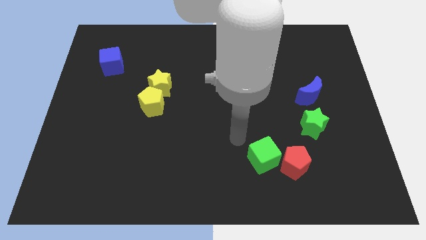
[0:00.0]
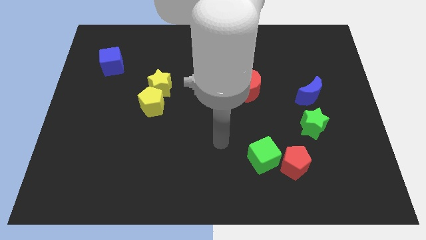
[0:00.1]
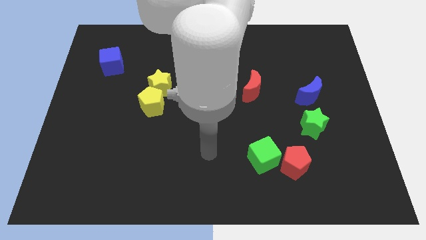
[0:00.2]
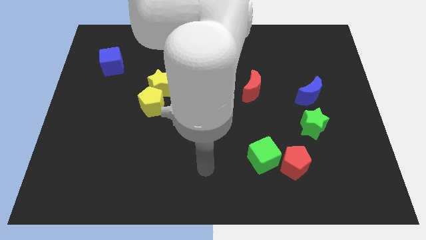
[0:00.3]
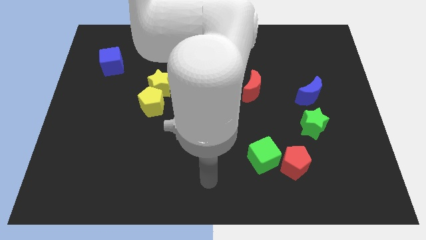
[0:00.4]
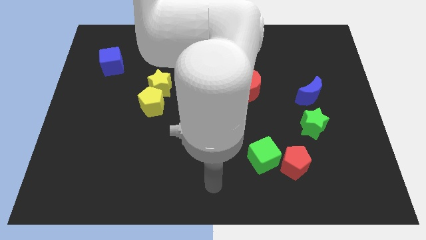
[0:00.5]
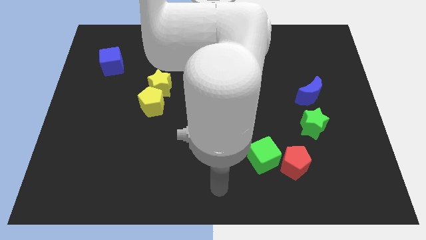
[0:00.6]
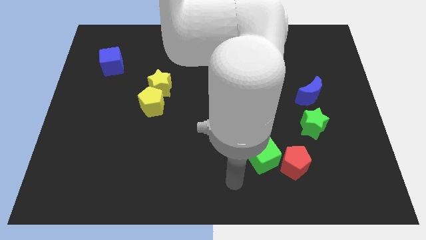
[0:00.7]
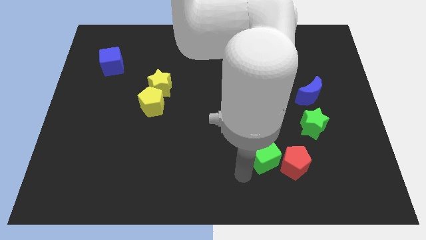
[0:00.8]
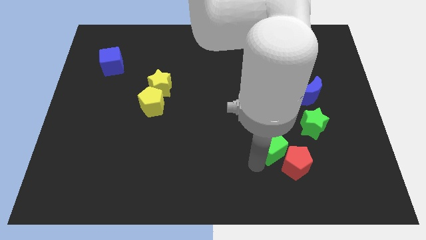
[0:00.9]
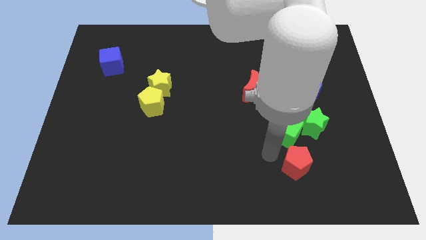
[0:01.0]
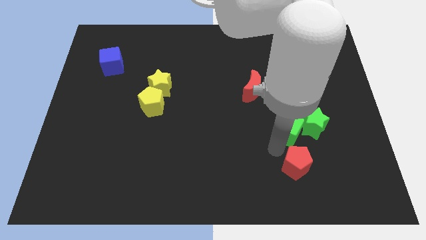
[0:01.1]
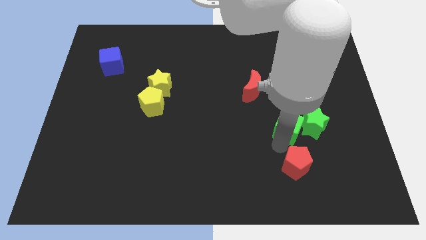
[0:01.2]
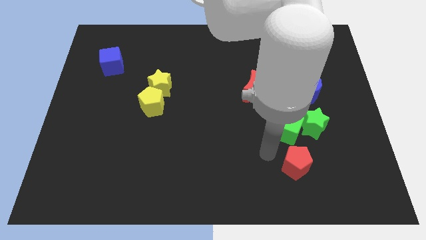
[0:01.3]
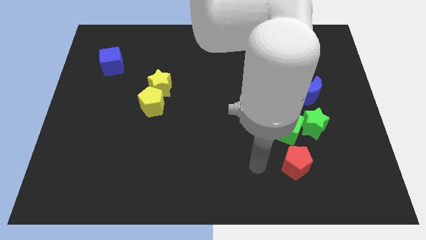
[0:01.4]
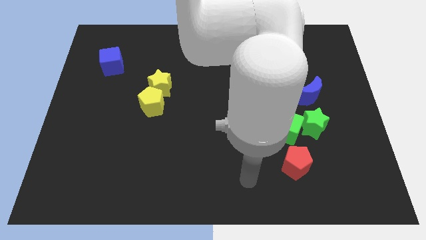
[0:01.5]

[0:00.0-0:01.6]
place the green cube to the left of green star

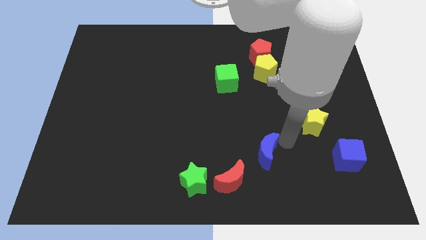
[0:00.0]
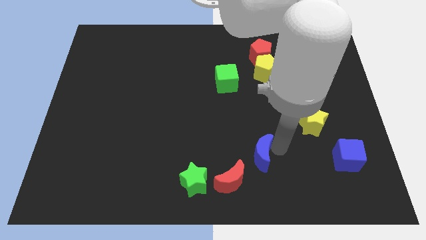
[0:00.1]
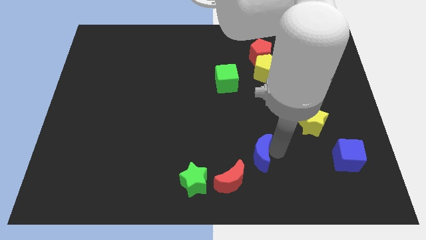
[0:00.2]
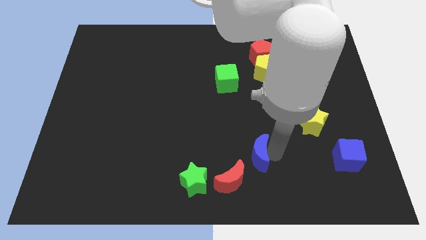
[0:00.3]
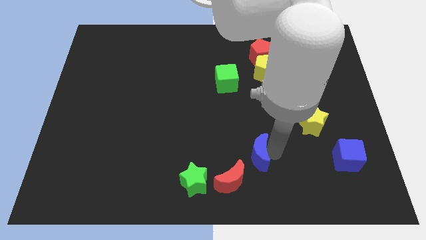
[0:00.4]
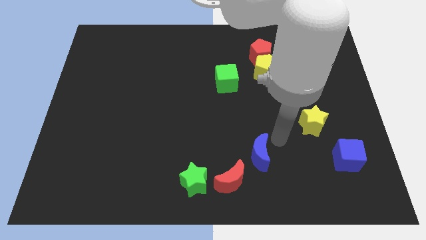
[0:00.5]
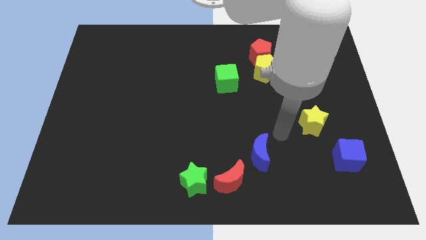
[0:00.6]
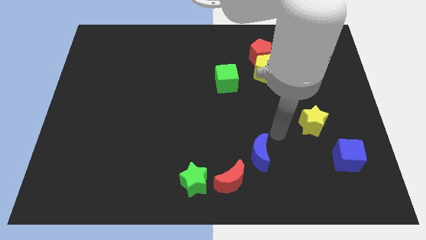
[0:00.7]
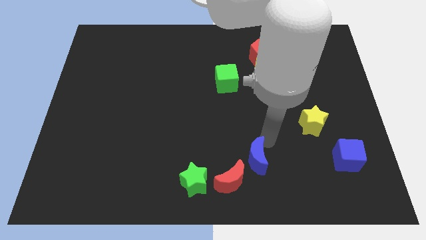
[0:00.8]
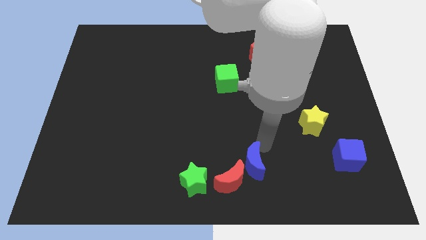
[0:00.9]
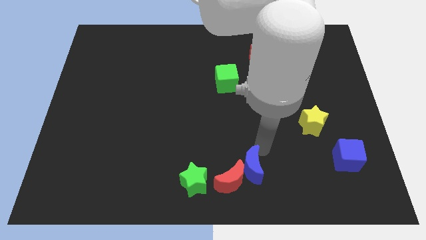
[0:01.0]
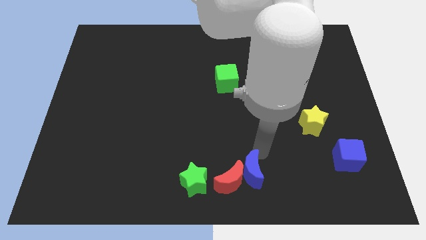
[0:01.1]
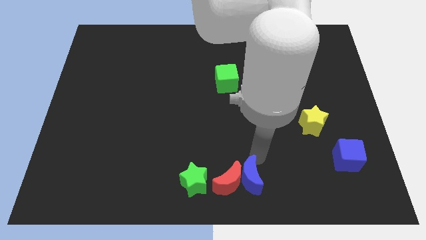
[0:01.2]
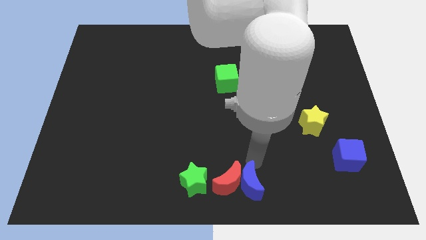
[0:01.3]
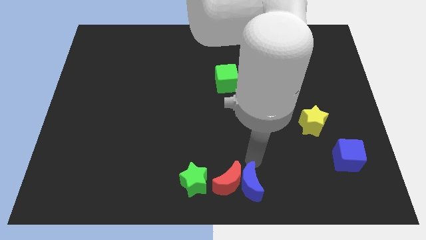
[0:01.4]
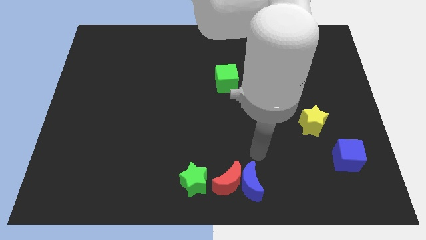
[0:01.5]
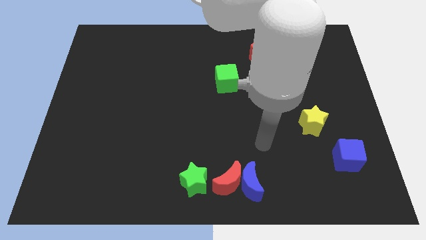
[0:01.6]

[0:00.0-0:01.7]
put the blue moon to the right of the red moon

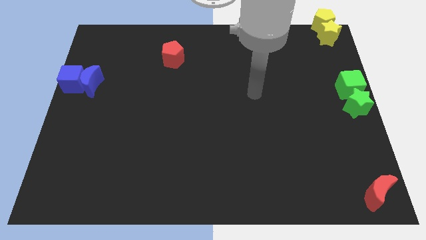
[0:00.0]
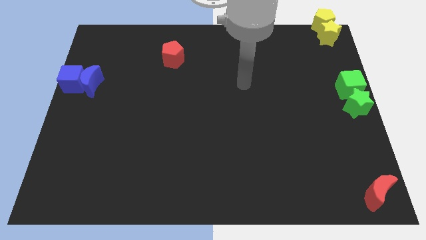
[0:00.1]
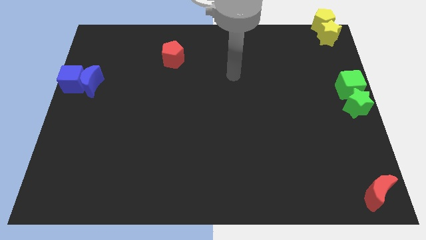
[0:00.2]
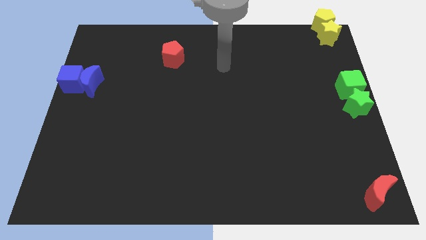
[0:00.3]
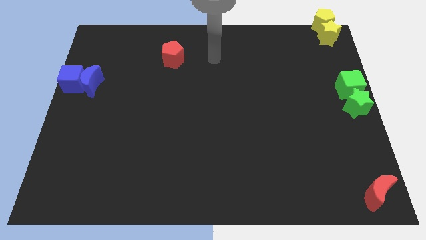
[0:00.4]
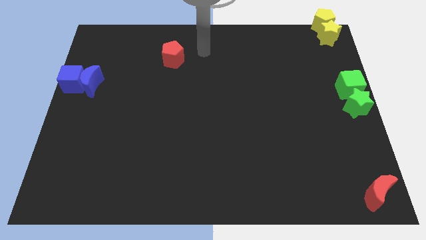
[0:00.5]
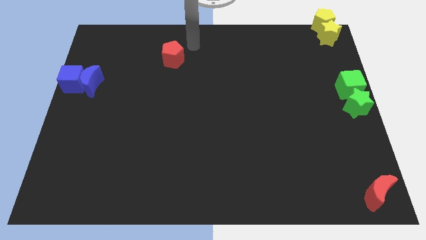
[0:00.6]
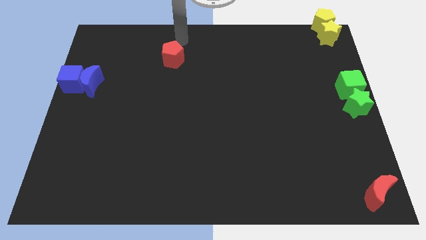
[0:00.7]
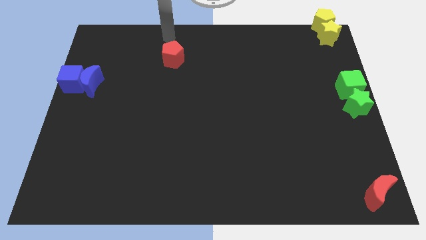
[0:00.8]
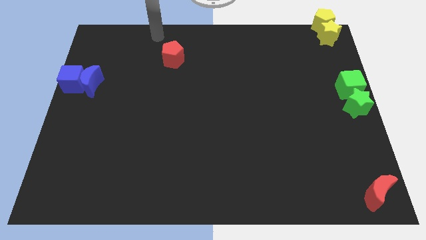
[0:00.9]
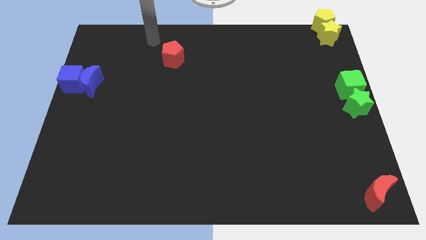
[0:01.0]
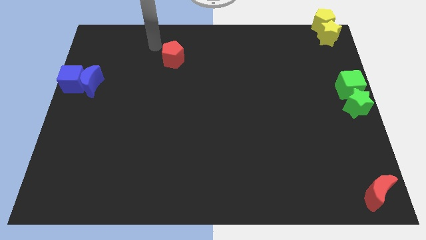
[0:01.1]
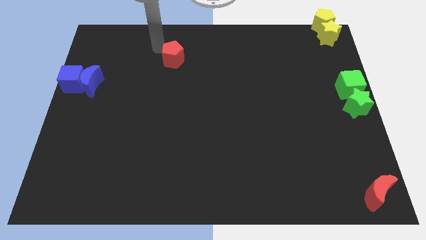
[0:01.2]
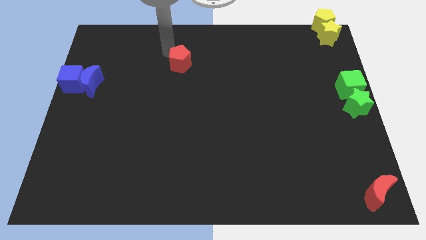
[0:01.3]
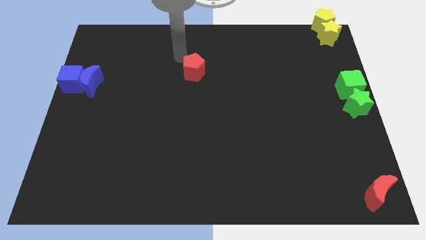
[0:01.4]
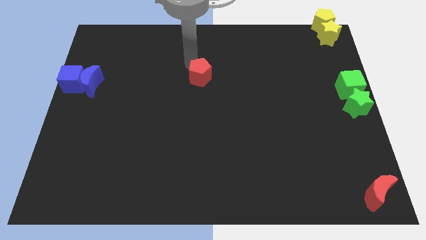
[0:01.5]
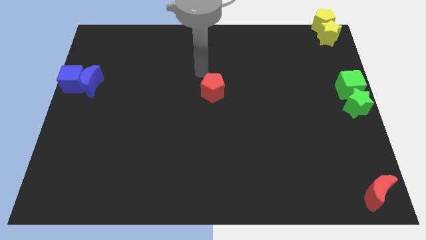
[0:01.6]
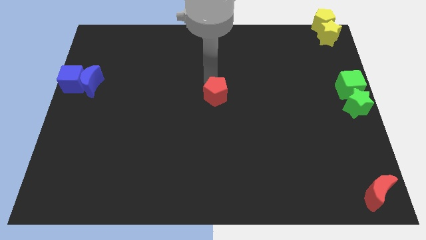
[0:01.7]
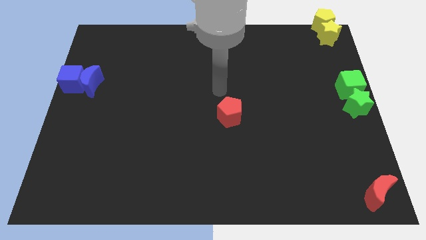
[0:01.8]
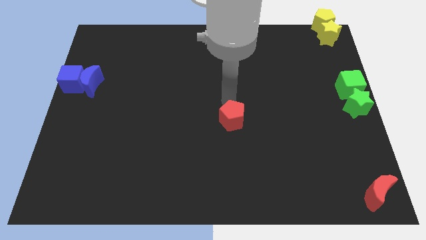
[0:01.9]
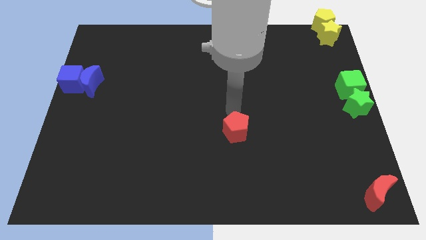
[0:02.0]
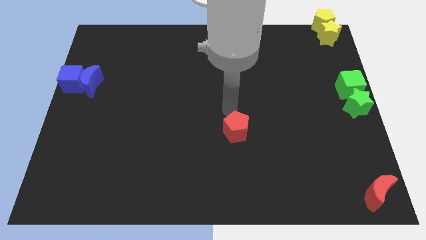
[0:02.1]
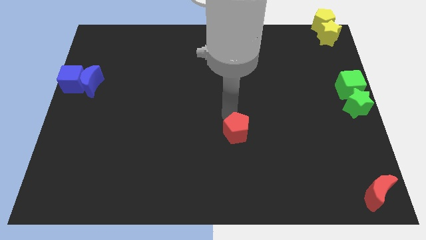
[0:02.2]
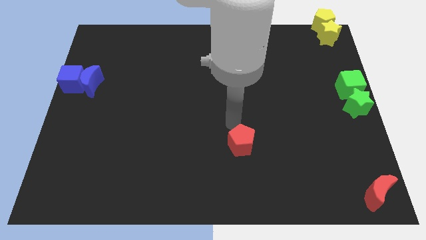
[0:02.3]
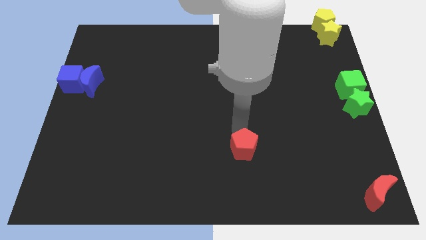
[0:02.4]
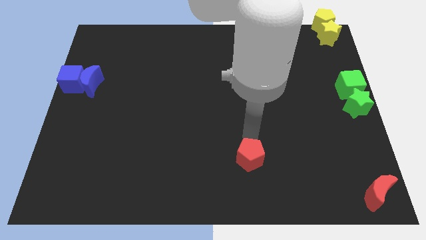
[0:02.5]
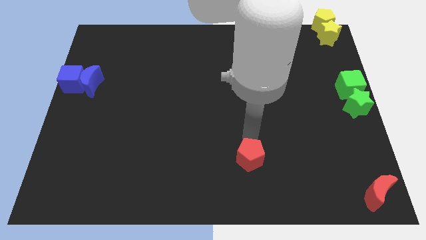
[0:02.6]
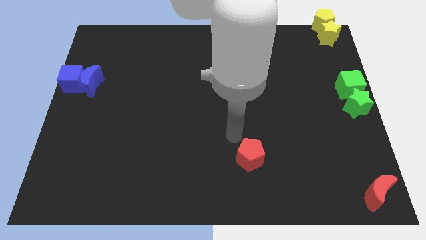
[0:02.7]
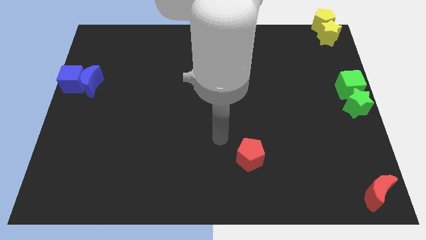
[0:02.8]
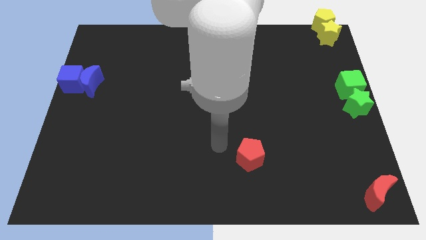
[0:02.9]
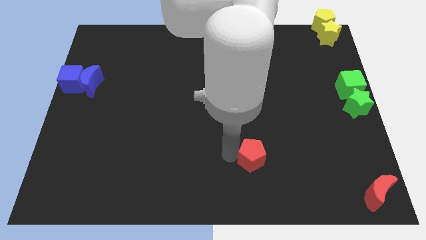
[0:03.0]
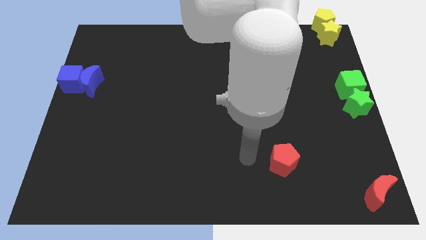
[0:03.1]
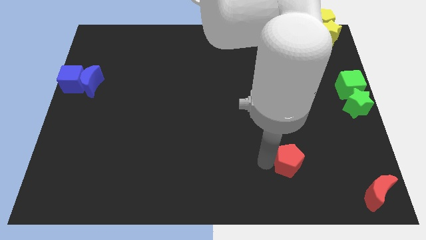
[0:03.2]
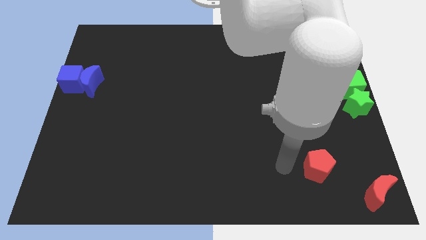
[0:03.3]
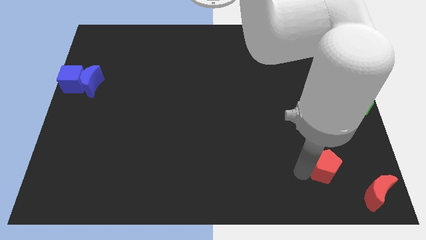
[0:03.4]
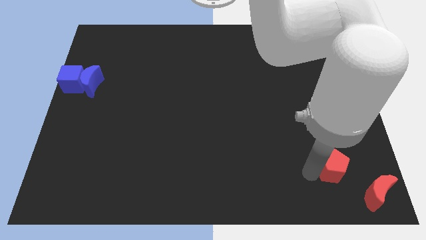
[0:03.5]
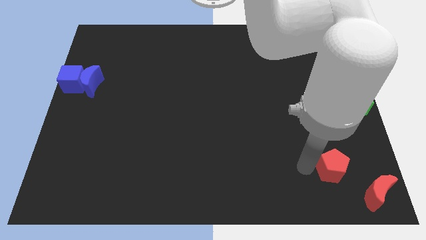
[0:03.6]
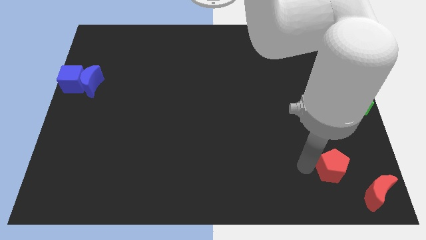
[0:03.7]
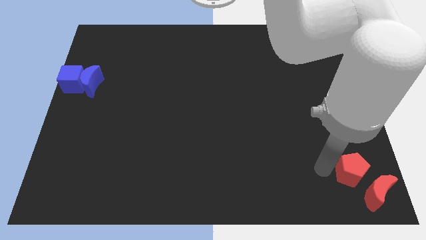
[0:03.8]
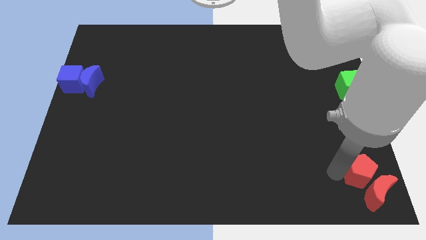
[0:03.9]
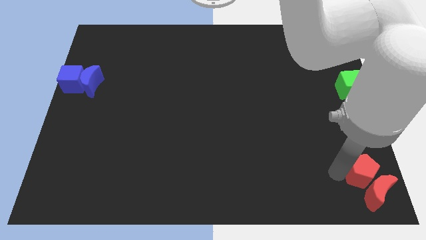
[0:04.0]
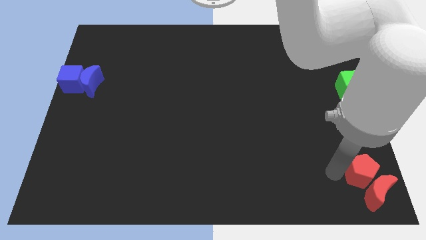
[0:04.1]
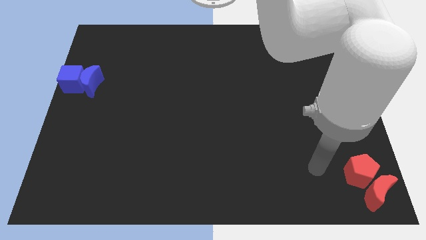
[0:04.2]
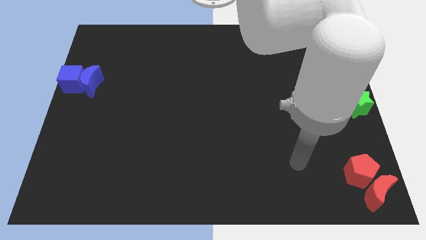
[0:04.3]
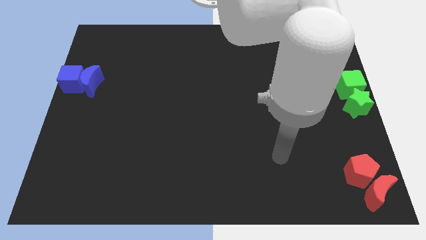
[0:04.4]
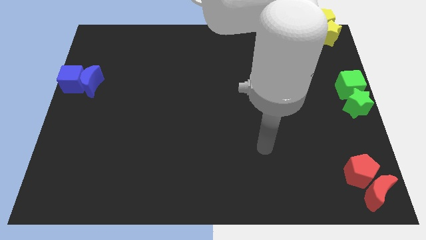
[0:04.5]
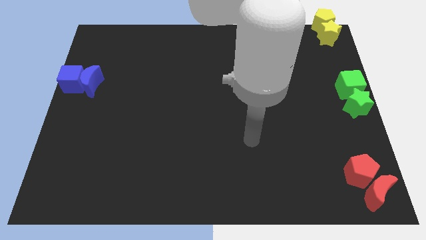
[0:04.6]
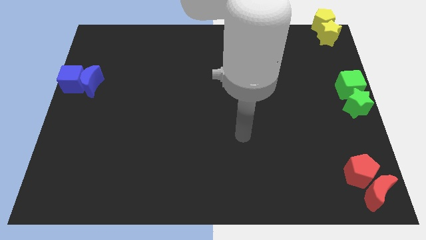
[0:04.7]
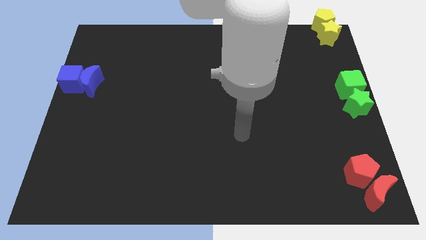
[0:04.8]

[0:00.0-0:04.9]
place the red pentagon above the red moon

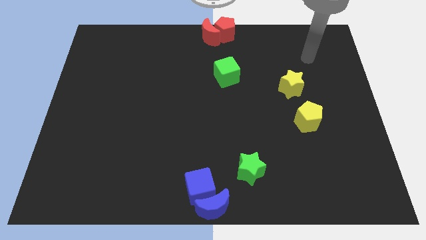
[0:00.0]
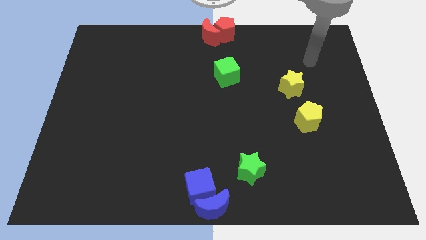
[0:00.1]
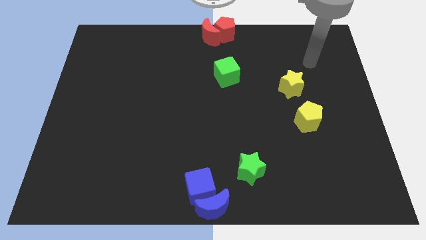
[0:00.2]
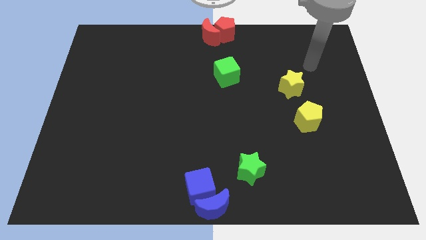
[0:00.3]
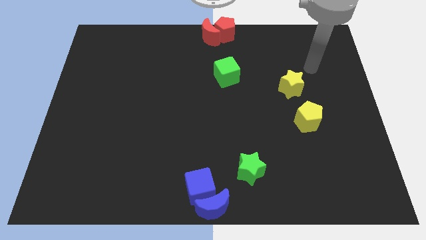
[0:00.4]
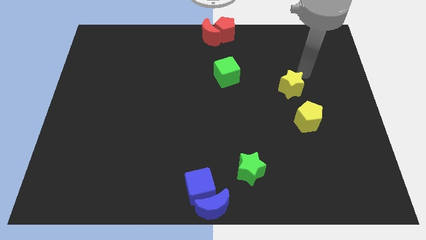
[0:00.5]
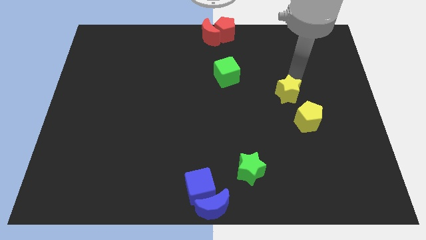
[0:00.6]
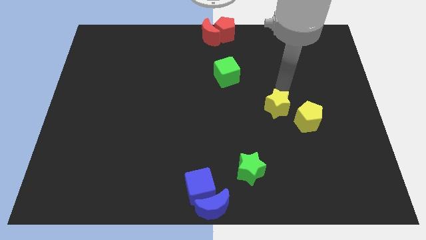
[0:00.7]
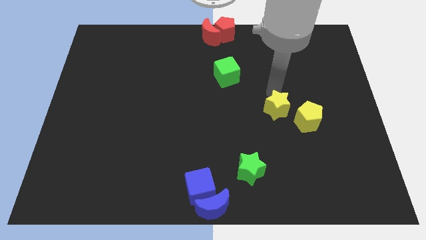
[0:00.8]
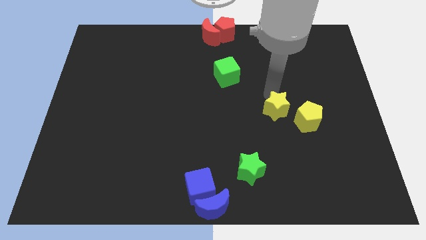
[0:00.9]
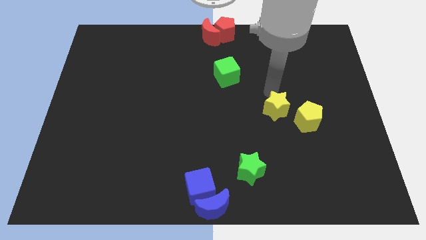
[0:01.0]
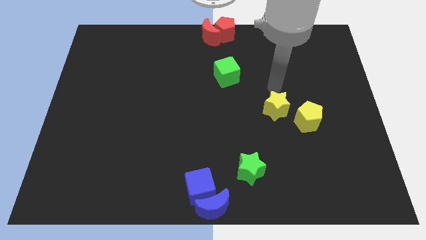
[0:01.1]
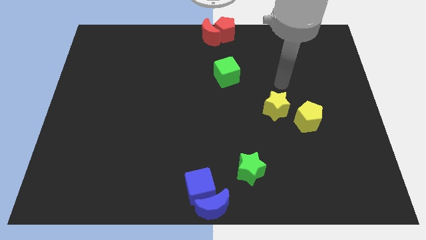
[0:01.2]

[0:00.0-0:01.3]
move the yellow star diagonal to the green star
